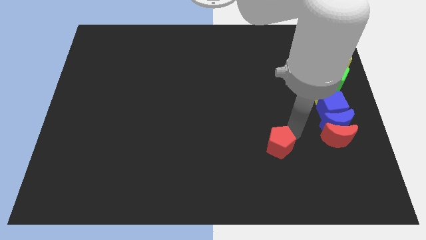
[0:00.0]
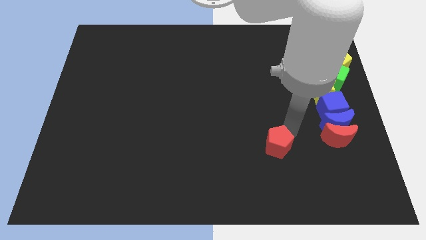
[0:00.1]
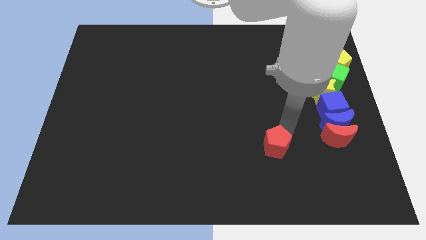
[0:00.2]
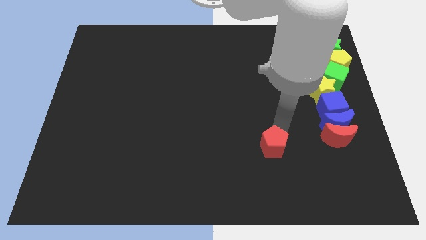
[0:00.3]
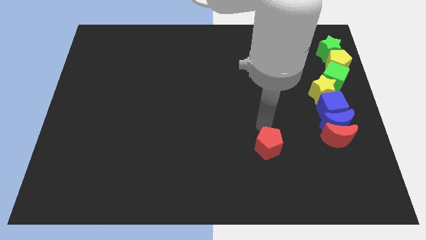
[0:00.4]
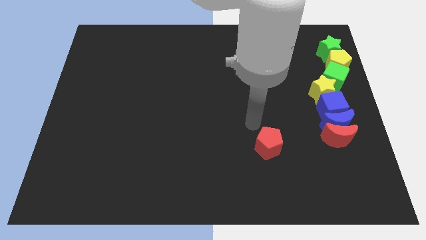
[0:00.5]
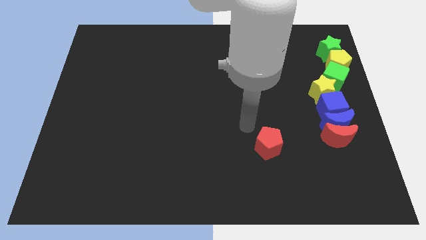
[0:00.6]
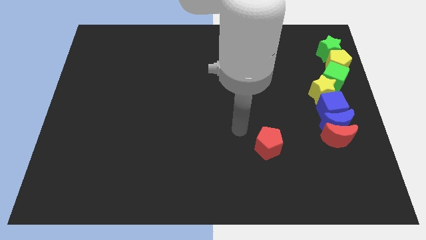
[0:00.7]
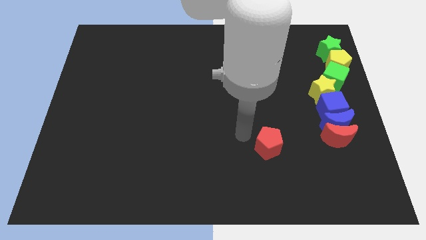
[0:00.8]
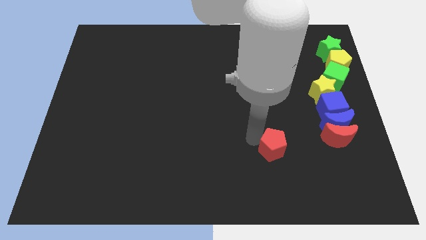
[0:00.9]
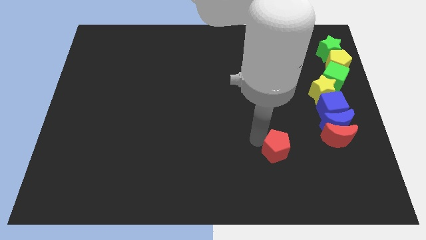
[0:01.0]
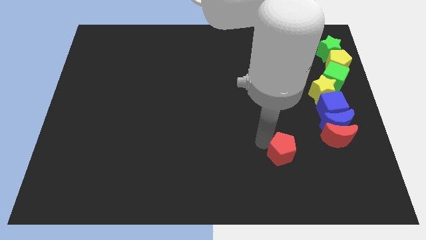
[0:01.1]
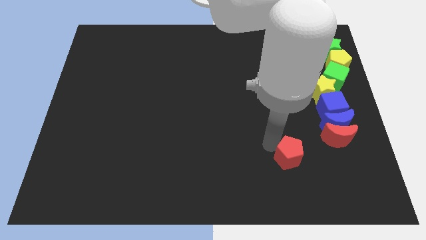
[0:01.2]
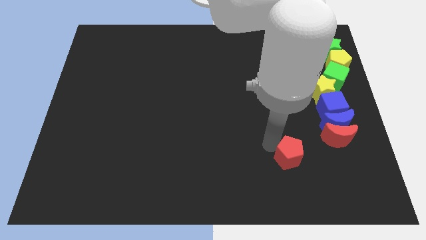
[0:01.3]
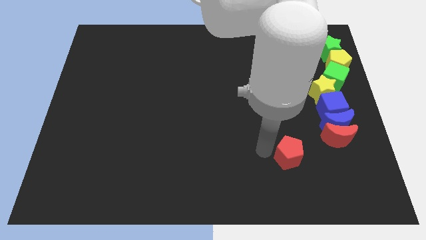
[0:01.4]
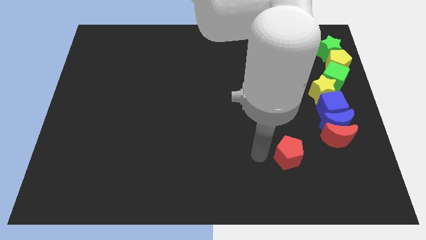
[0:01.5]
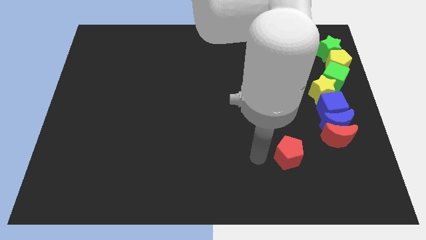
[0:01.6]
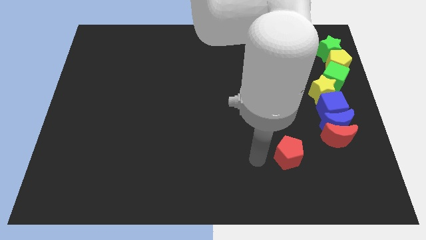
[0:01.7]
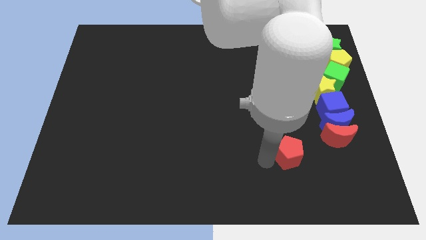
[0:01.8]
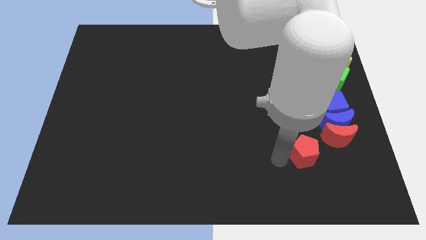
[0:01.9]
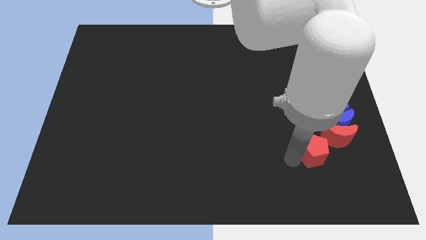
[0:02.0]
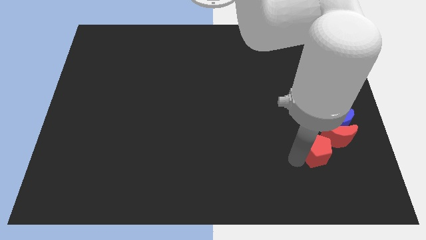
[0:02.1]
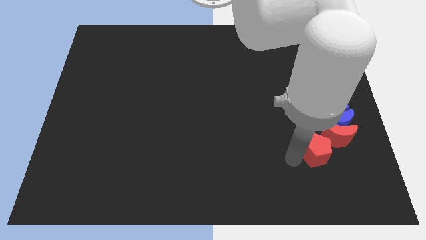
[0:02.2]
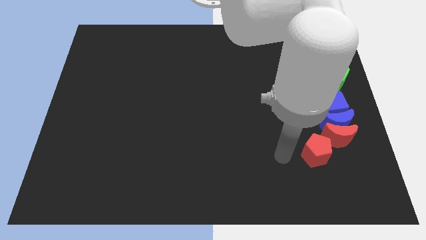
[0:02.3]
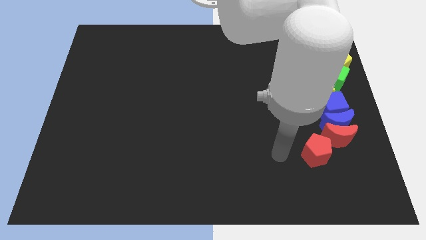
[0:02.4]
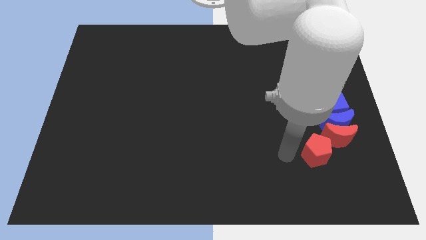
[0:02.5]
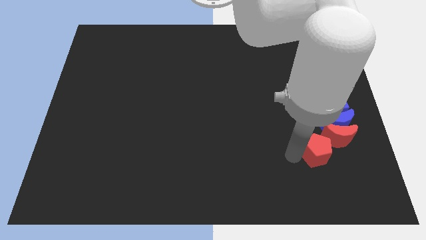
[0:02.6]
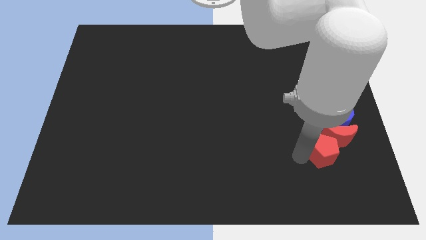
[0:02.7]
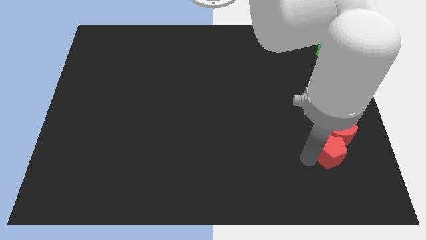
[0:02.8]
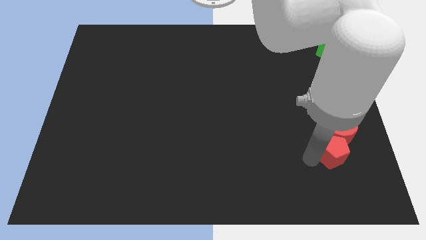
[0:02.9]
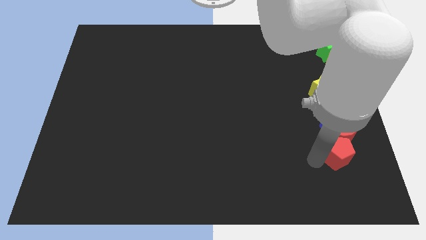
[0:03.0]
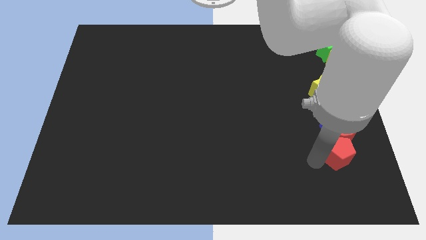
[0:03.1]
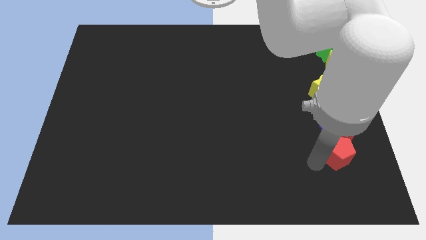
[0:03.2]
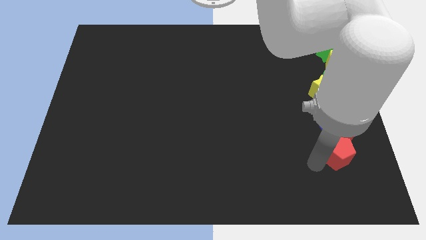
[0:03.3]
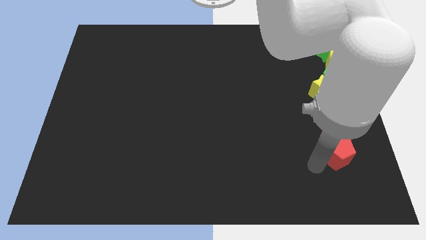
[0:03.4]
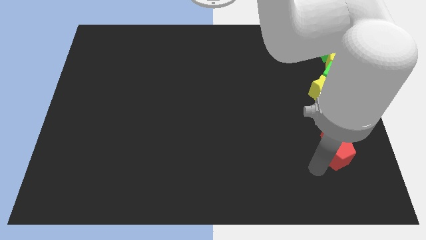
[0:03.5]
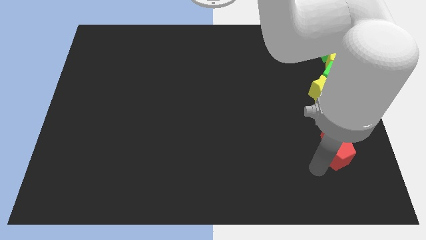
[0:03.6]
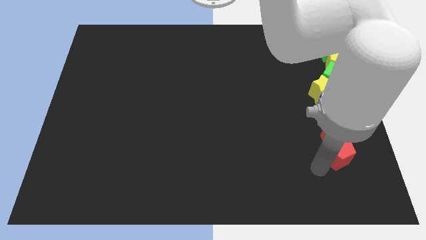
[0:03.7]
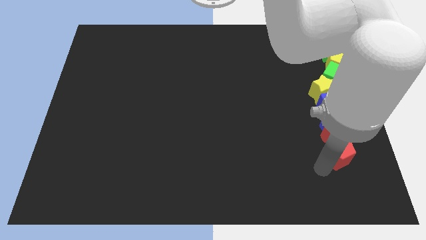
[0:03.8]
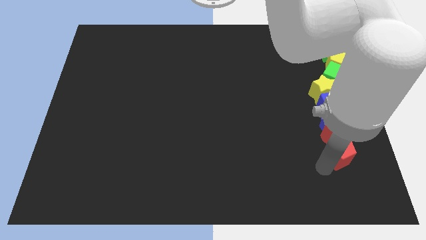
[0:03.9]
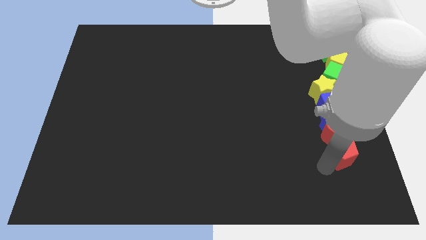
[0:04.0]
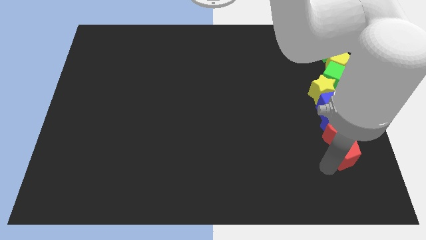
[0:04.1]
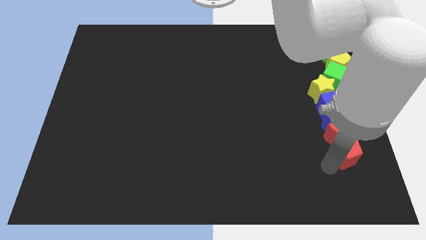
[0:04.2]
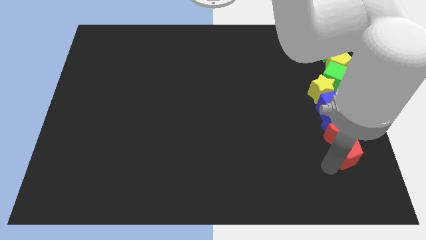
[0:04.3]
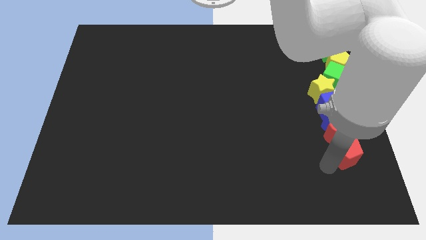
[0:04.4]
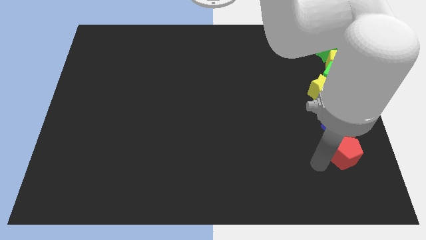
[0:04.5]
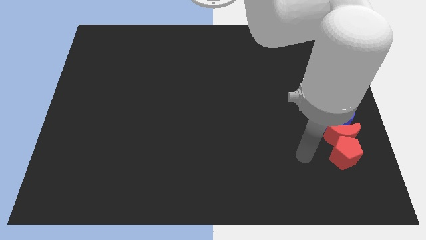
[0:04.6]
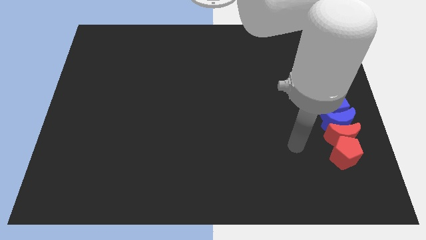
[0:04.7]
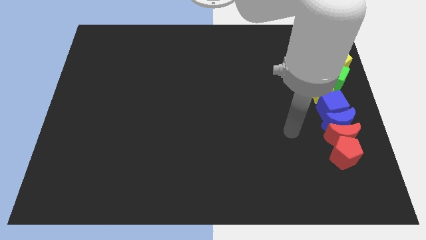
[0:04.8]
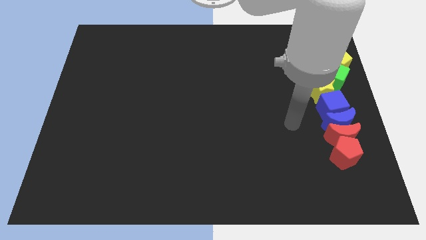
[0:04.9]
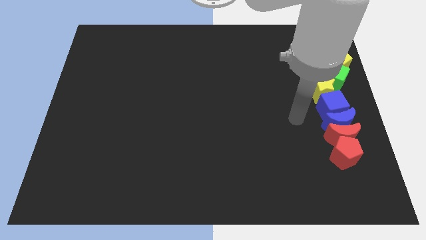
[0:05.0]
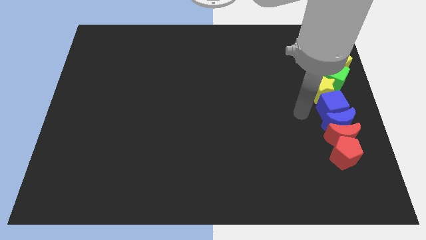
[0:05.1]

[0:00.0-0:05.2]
place the red pentagon below to the red crescent

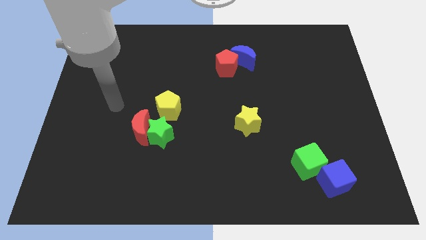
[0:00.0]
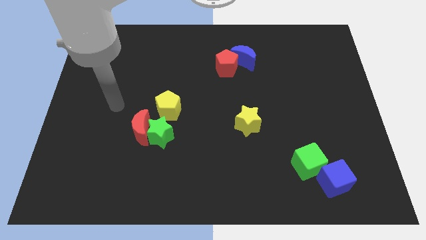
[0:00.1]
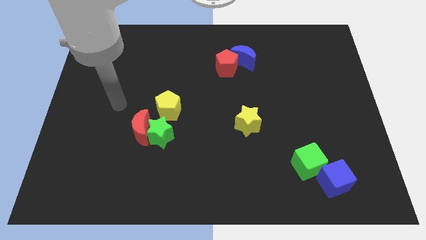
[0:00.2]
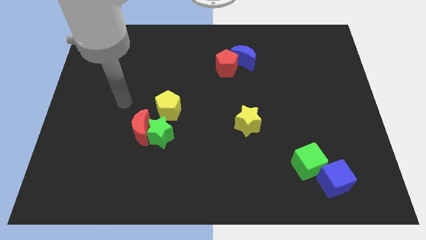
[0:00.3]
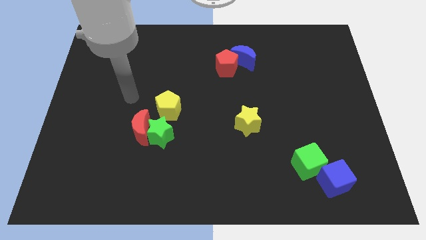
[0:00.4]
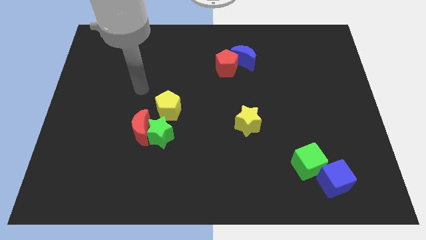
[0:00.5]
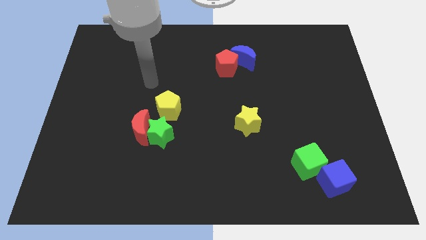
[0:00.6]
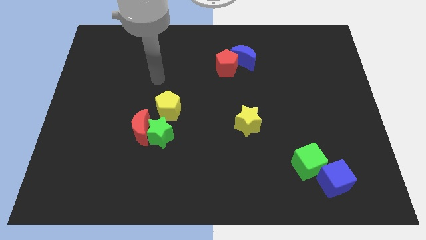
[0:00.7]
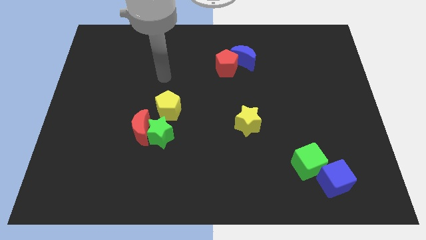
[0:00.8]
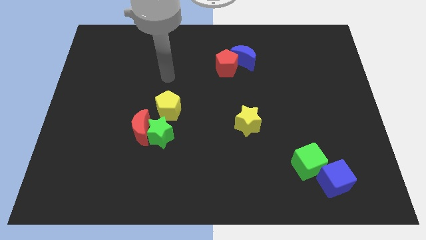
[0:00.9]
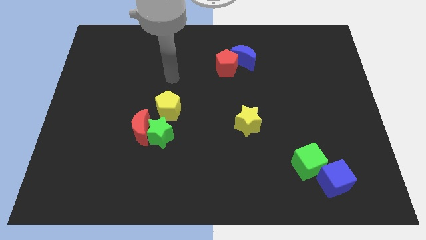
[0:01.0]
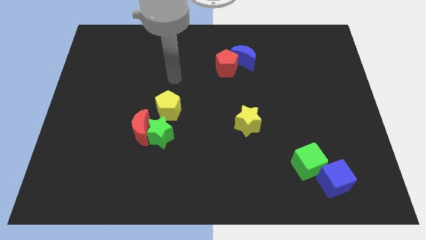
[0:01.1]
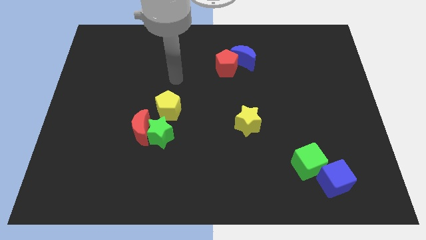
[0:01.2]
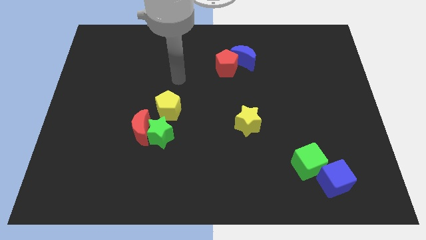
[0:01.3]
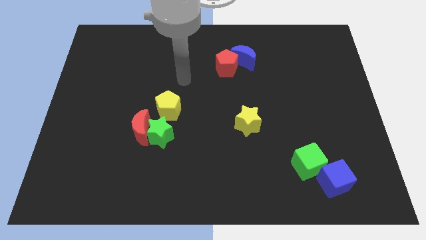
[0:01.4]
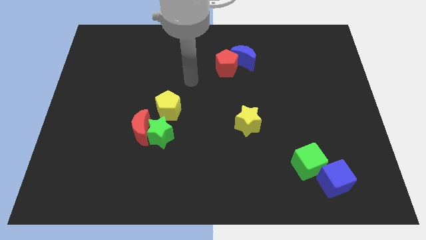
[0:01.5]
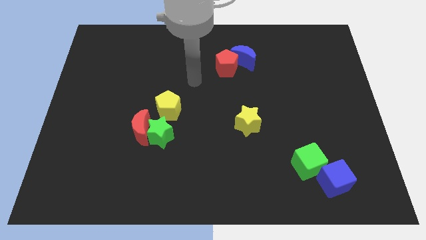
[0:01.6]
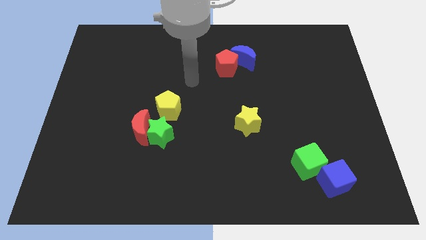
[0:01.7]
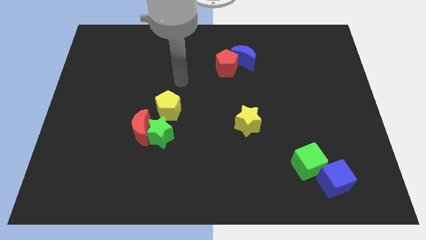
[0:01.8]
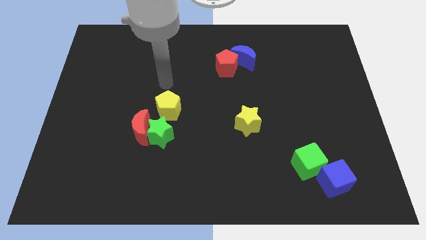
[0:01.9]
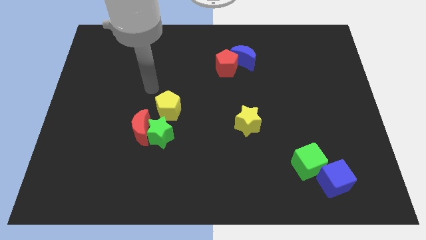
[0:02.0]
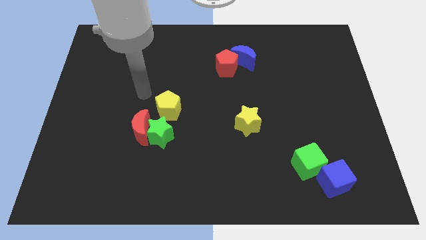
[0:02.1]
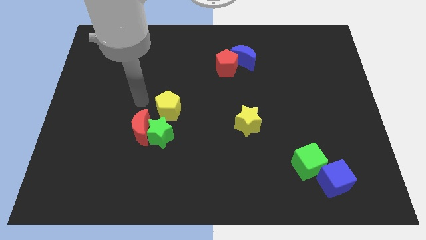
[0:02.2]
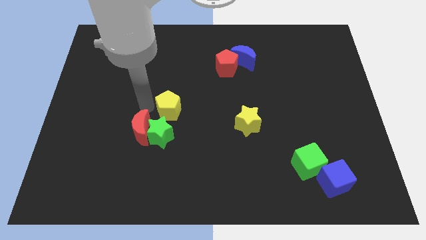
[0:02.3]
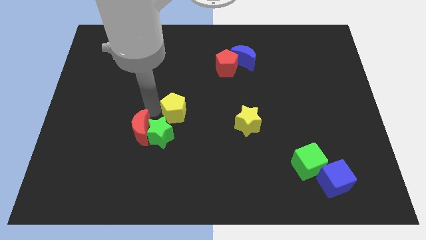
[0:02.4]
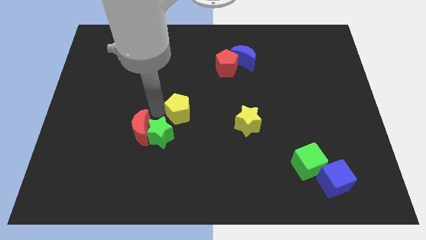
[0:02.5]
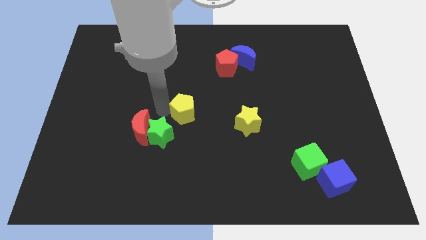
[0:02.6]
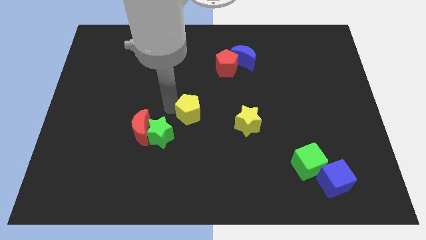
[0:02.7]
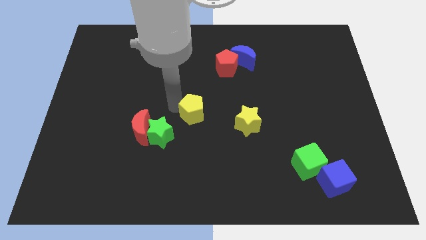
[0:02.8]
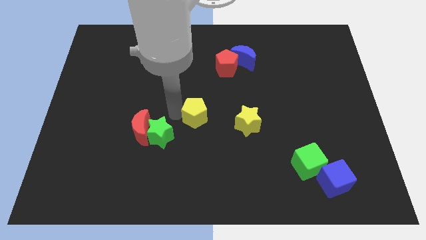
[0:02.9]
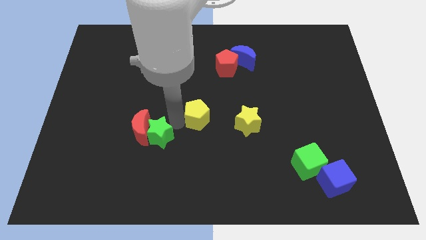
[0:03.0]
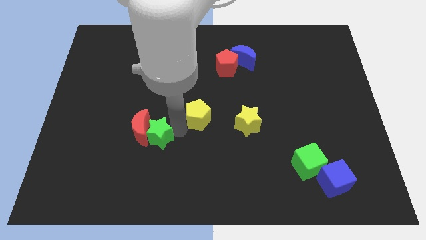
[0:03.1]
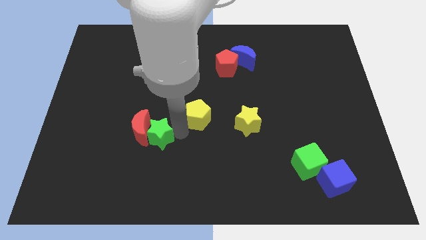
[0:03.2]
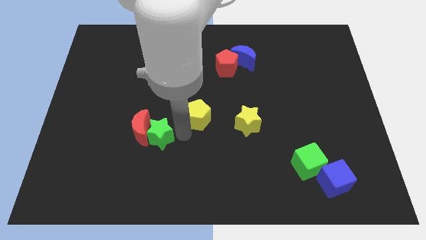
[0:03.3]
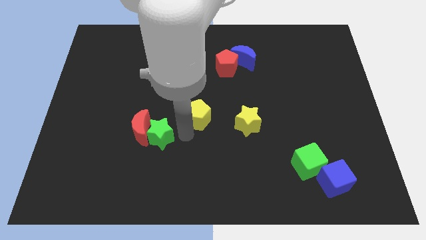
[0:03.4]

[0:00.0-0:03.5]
push the yellow pentagon to the left side of yellow star

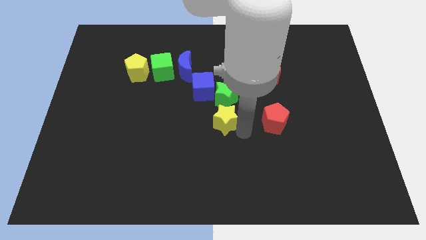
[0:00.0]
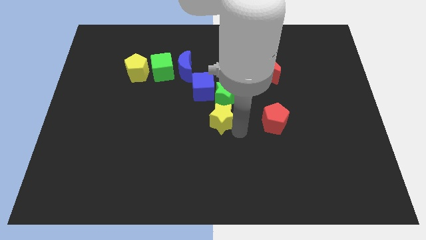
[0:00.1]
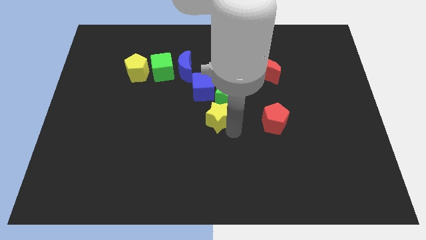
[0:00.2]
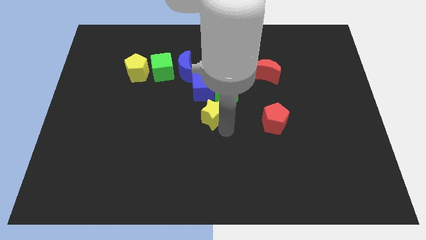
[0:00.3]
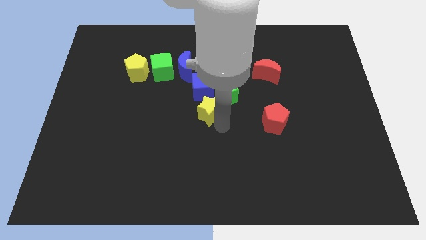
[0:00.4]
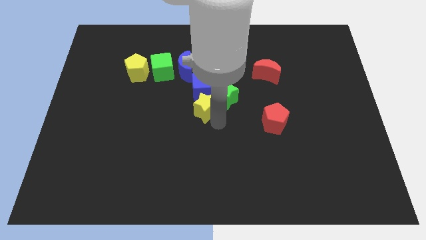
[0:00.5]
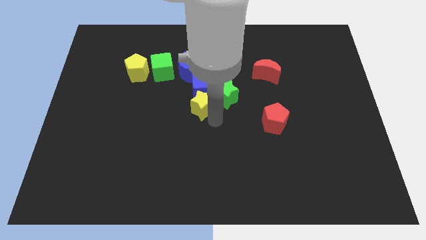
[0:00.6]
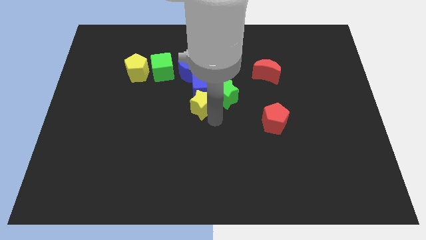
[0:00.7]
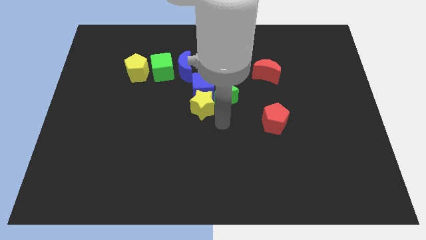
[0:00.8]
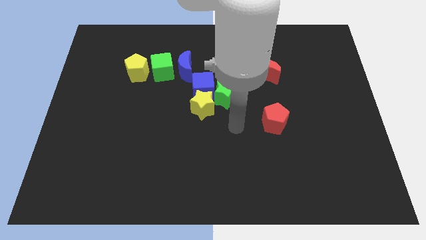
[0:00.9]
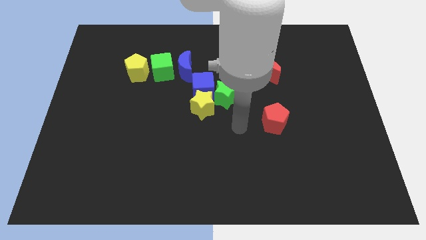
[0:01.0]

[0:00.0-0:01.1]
push the yellow star to the bottom of the blue cube
